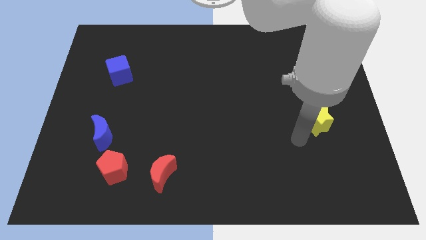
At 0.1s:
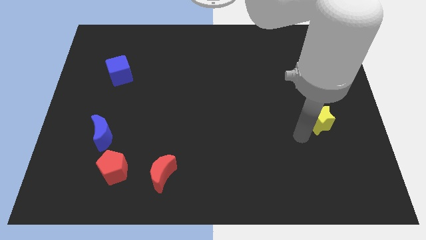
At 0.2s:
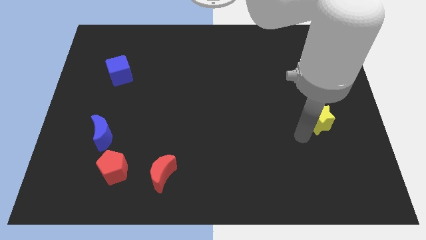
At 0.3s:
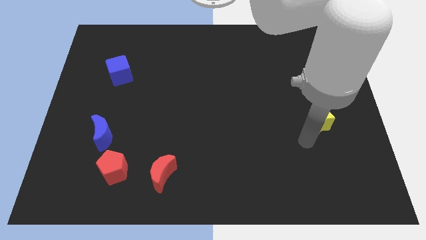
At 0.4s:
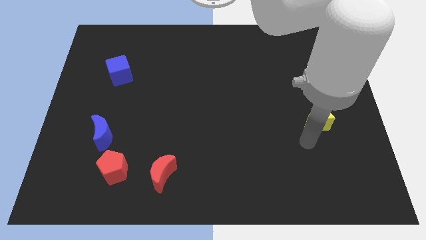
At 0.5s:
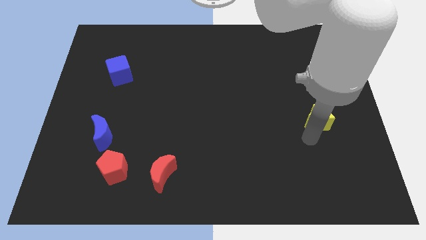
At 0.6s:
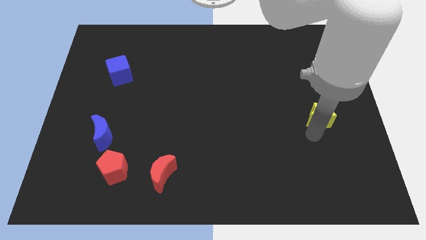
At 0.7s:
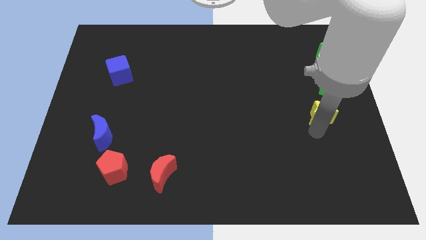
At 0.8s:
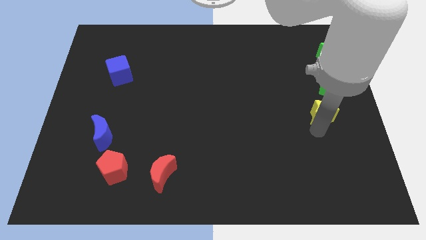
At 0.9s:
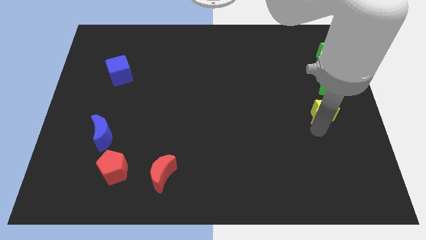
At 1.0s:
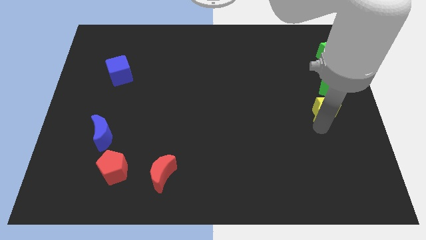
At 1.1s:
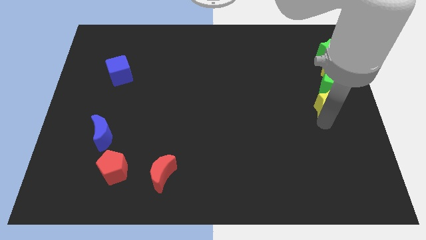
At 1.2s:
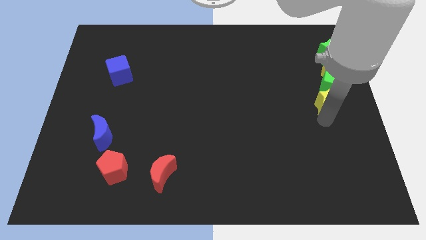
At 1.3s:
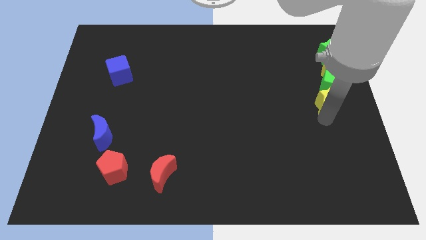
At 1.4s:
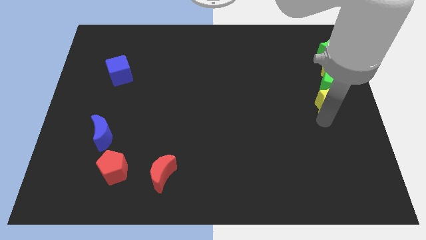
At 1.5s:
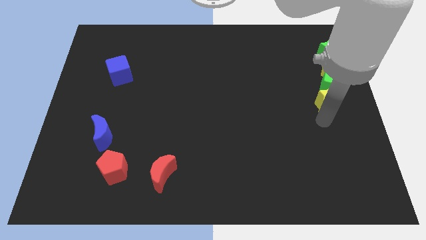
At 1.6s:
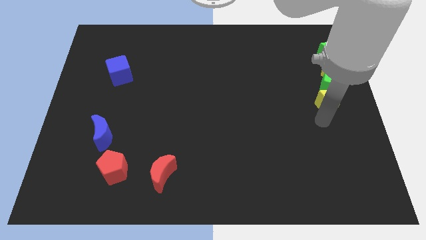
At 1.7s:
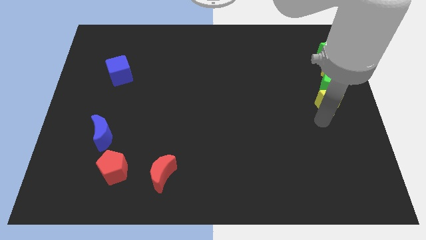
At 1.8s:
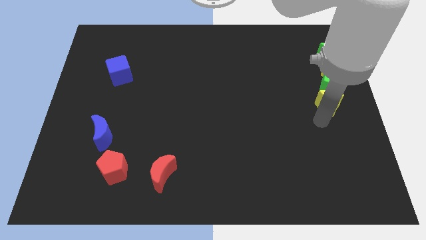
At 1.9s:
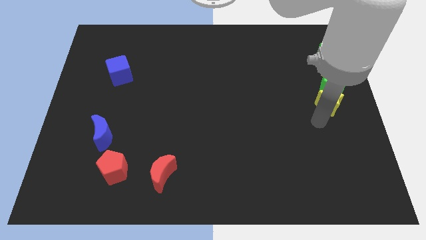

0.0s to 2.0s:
place the yellow star to the bottom of the green cube

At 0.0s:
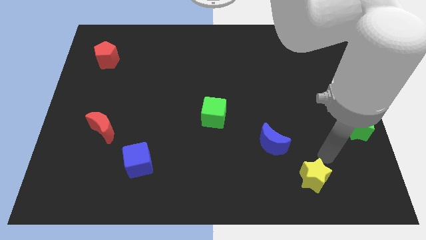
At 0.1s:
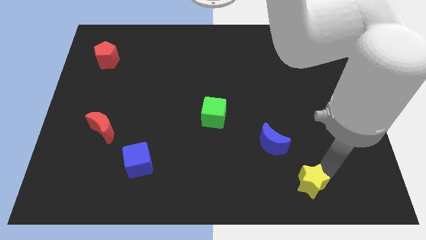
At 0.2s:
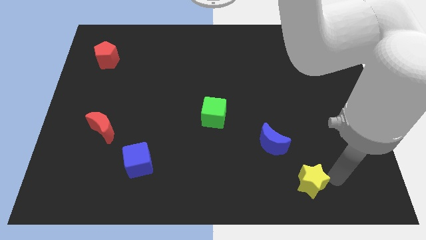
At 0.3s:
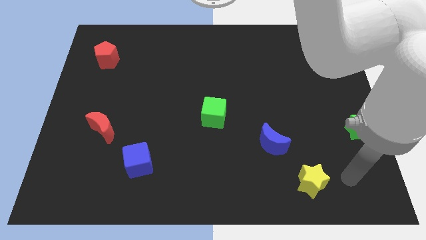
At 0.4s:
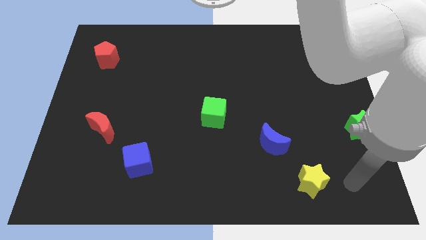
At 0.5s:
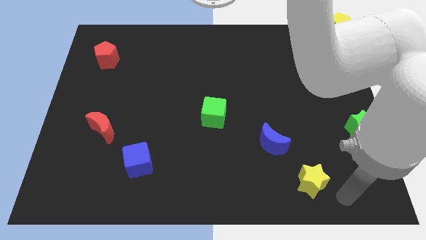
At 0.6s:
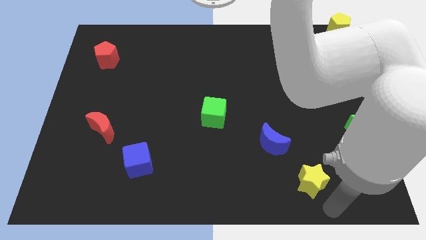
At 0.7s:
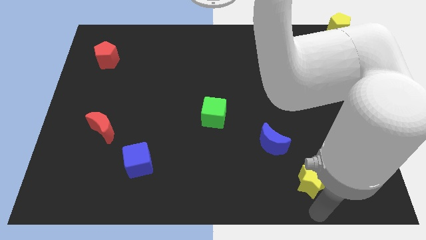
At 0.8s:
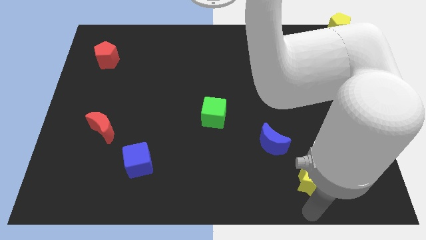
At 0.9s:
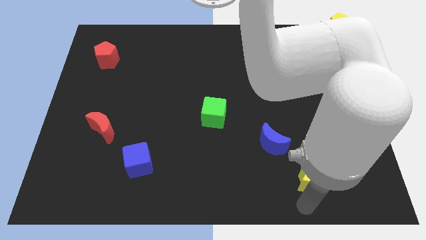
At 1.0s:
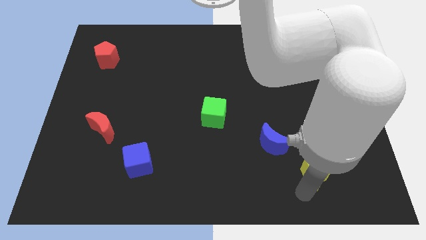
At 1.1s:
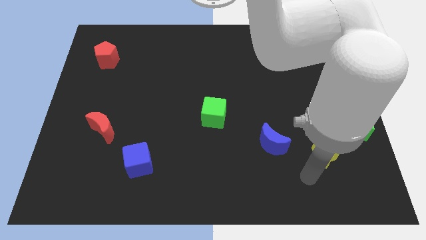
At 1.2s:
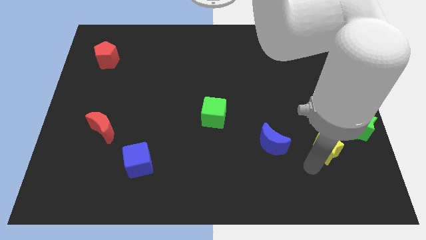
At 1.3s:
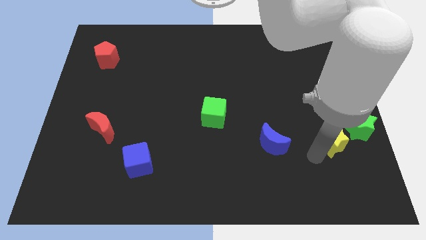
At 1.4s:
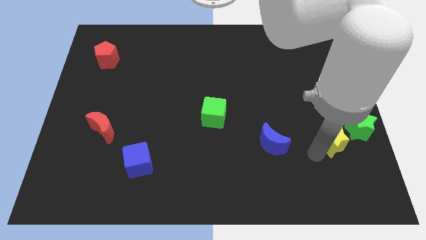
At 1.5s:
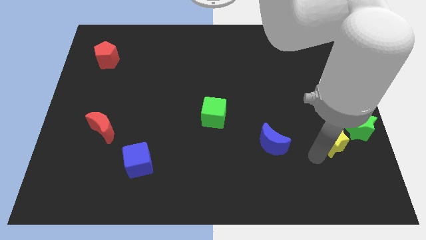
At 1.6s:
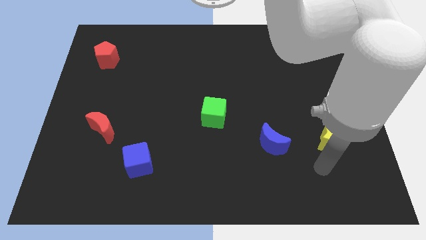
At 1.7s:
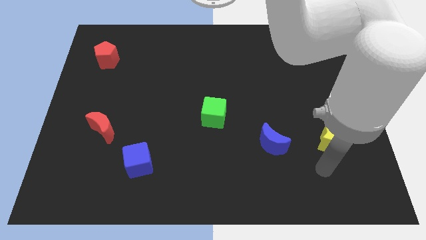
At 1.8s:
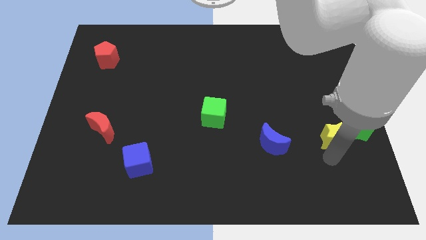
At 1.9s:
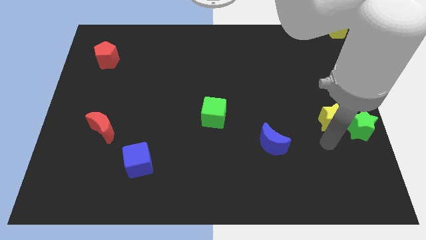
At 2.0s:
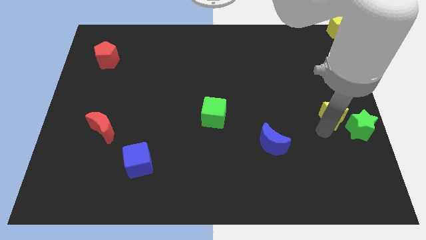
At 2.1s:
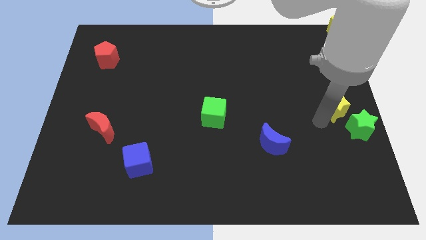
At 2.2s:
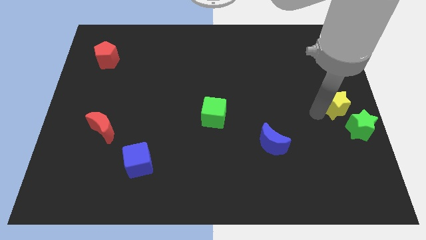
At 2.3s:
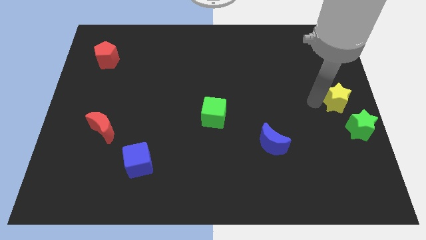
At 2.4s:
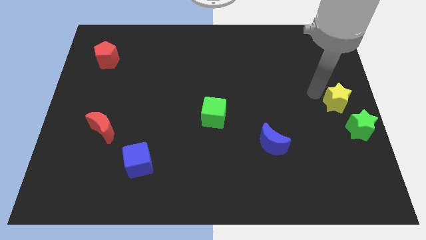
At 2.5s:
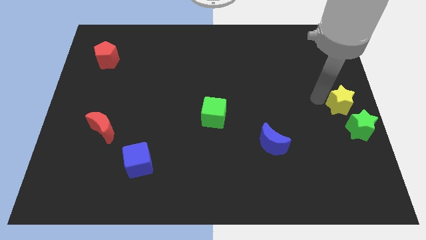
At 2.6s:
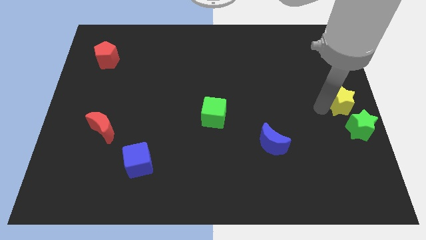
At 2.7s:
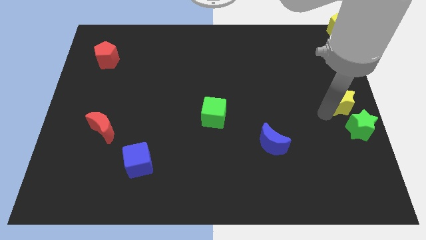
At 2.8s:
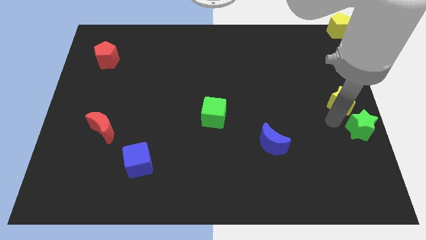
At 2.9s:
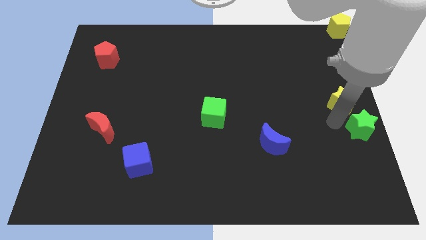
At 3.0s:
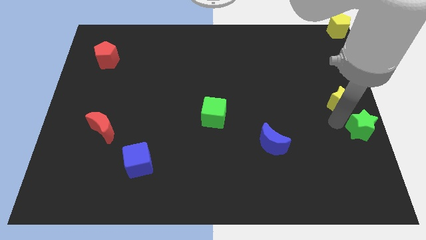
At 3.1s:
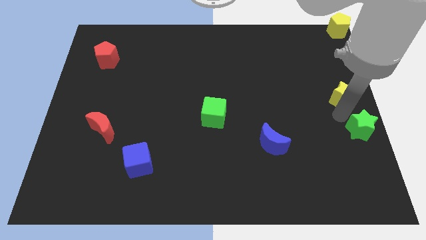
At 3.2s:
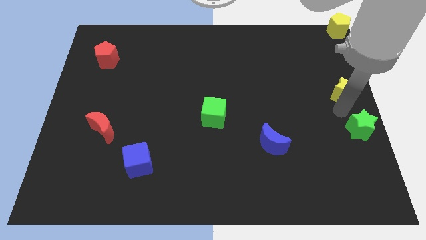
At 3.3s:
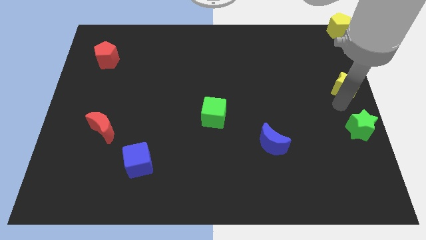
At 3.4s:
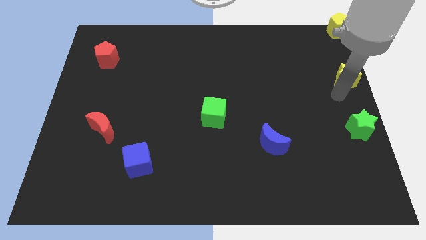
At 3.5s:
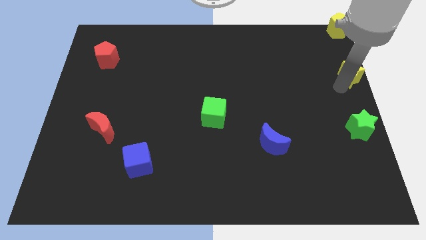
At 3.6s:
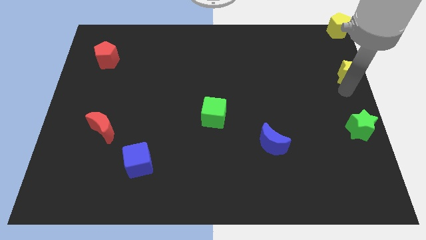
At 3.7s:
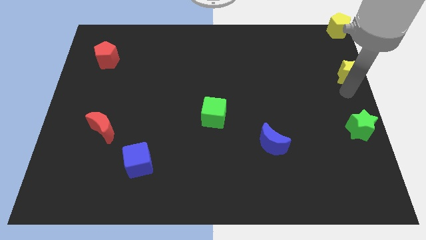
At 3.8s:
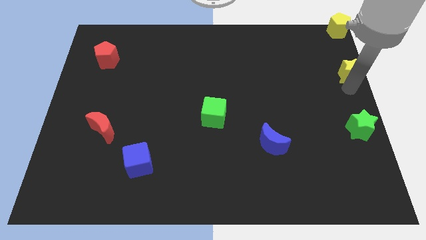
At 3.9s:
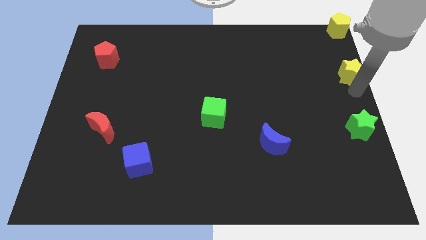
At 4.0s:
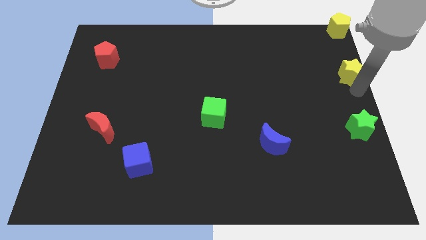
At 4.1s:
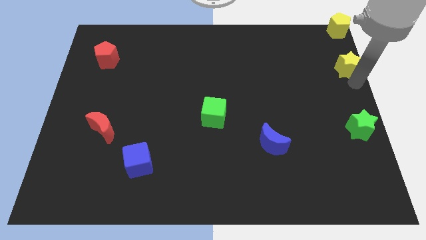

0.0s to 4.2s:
place the yellow star in between the green star and yellow pentagon

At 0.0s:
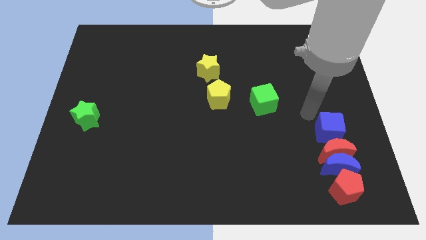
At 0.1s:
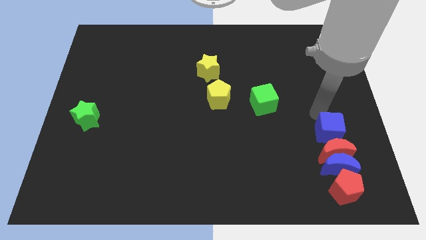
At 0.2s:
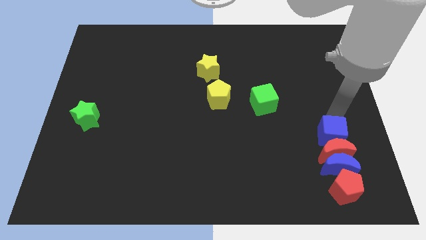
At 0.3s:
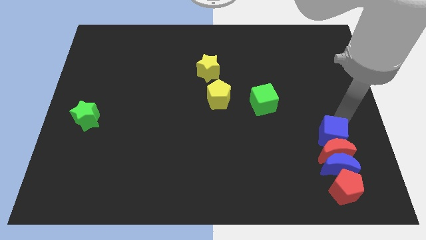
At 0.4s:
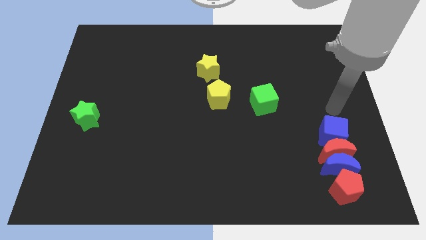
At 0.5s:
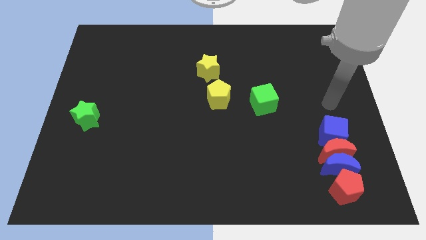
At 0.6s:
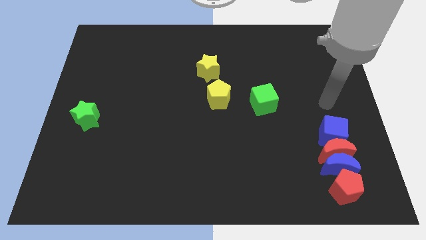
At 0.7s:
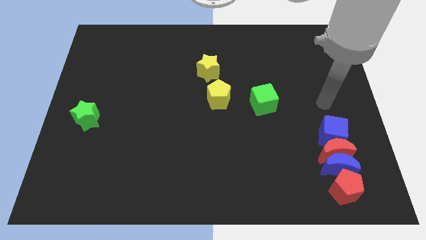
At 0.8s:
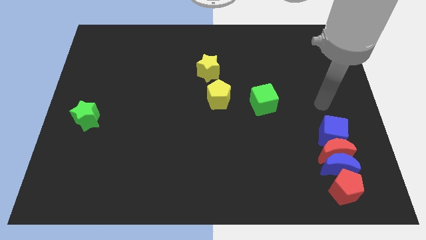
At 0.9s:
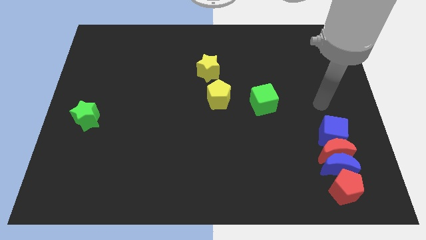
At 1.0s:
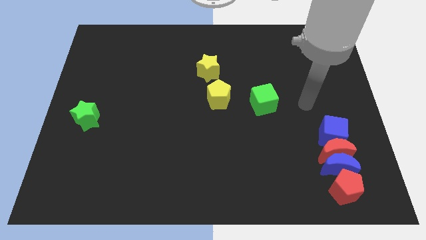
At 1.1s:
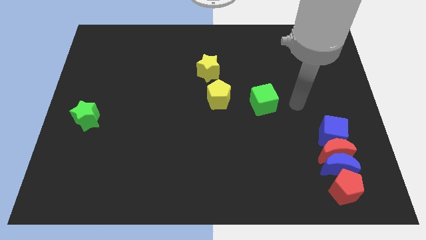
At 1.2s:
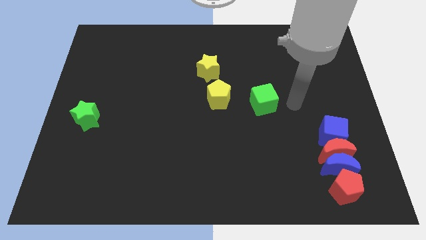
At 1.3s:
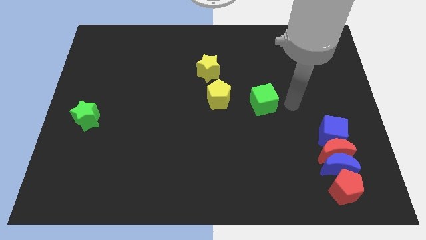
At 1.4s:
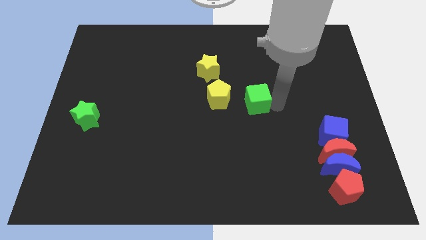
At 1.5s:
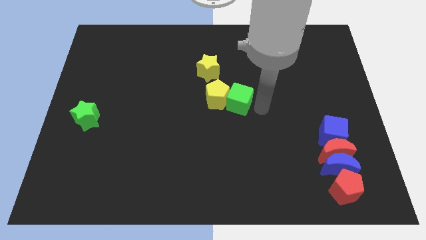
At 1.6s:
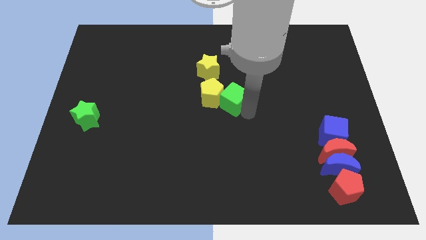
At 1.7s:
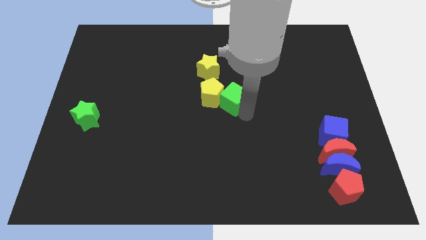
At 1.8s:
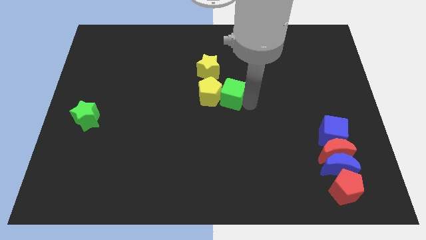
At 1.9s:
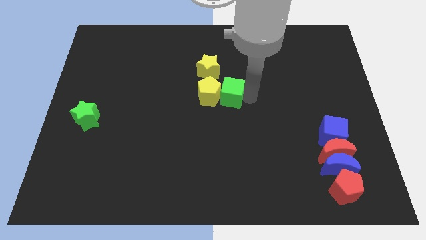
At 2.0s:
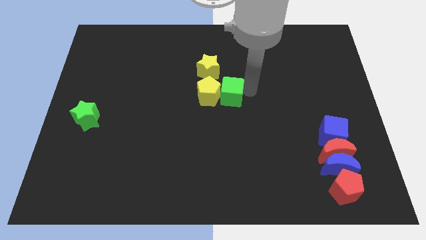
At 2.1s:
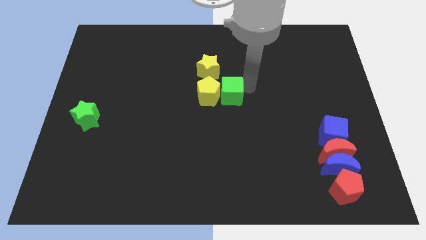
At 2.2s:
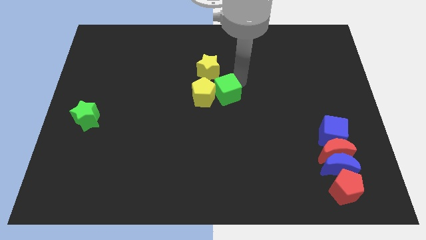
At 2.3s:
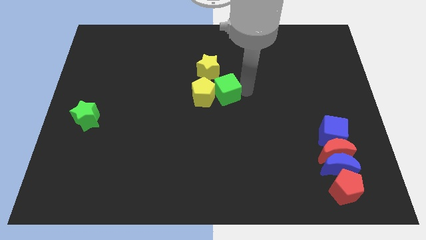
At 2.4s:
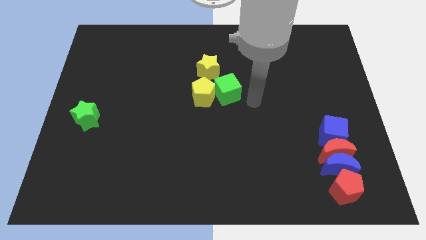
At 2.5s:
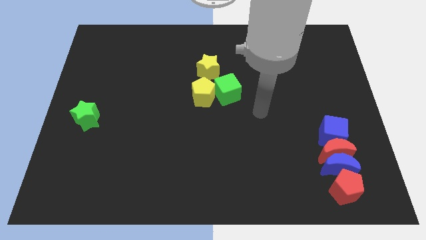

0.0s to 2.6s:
touch the green cube

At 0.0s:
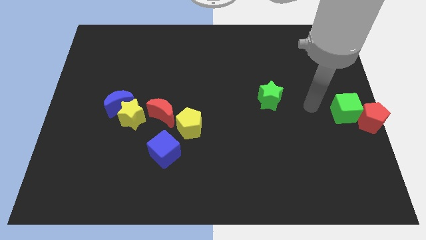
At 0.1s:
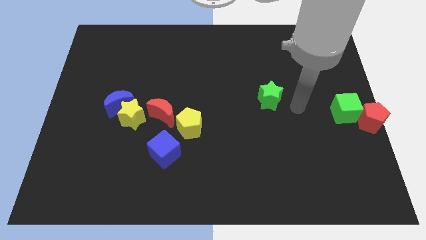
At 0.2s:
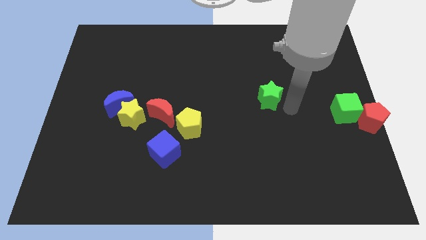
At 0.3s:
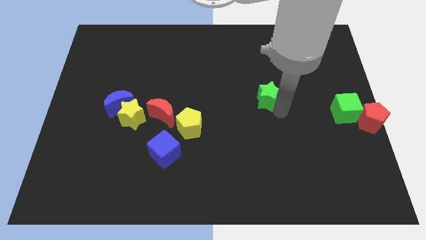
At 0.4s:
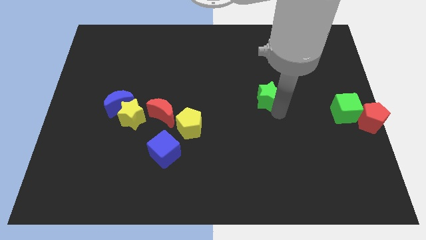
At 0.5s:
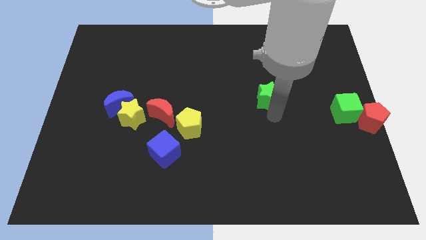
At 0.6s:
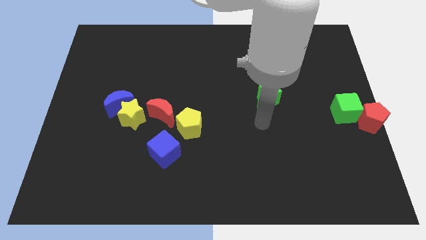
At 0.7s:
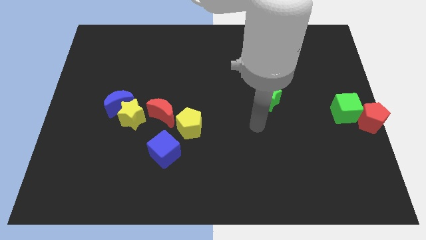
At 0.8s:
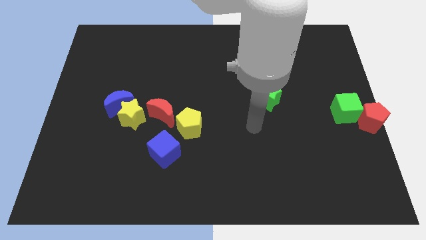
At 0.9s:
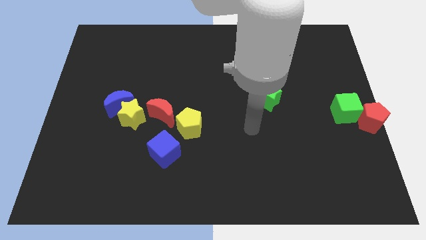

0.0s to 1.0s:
slightly move the green star to the left side of the board
